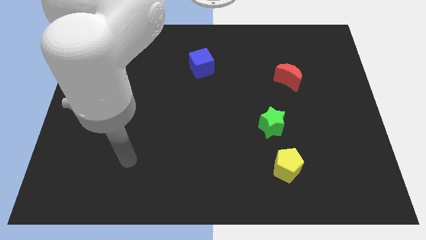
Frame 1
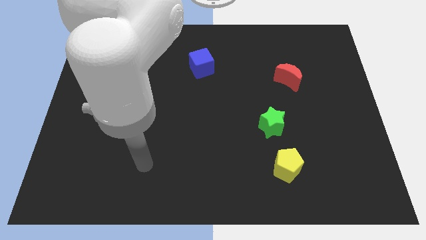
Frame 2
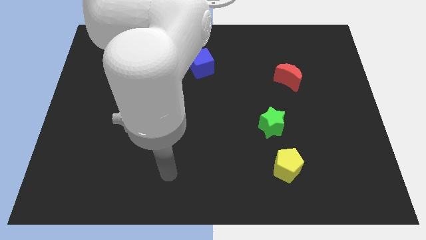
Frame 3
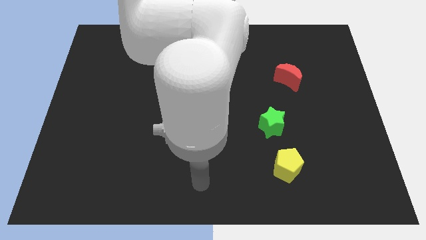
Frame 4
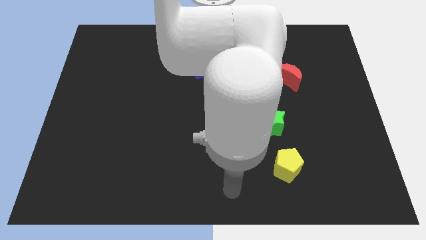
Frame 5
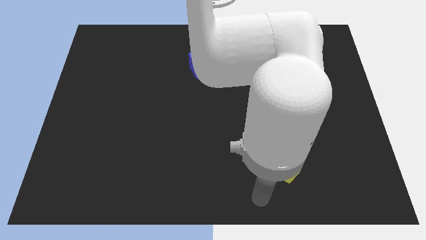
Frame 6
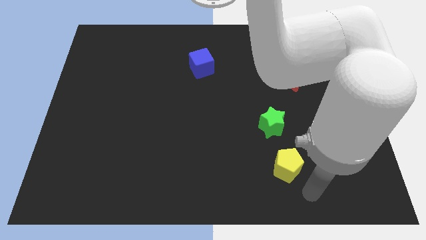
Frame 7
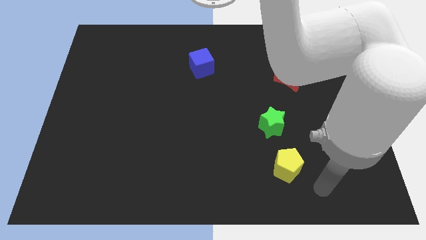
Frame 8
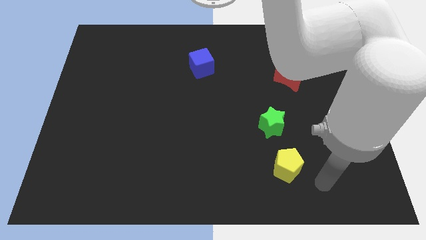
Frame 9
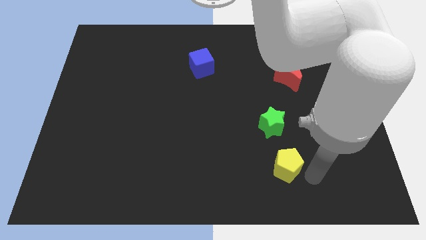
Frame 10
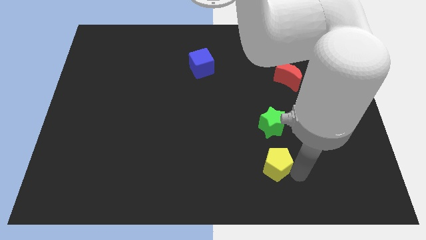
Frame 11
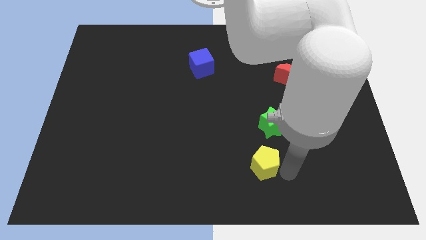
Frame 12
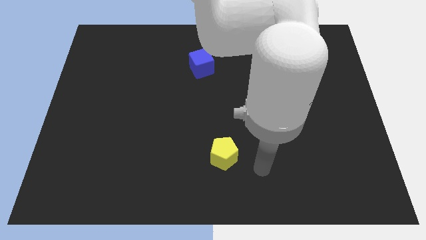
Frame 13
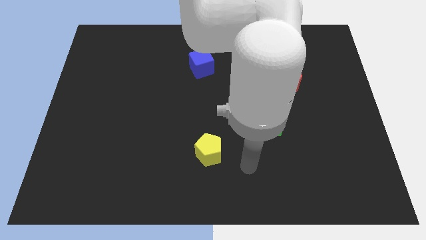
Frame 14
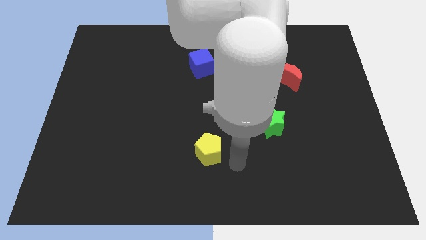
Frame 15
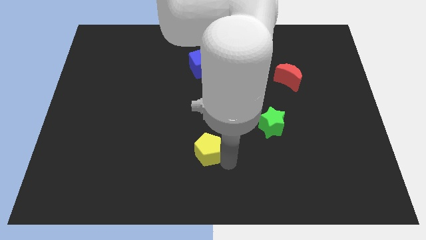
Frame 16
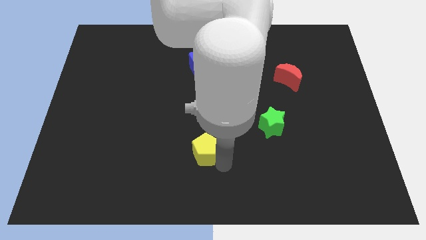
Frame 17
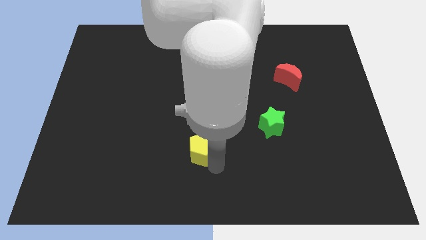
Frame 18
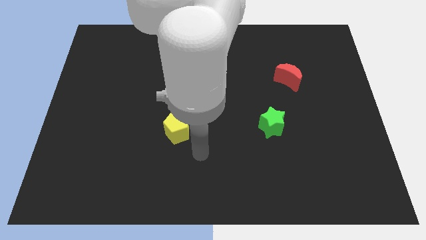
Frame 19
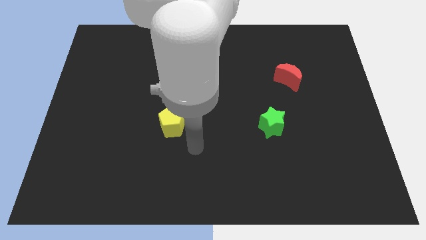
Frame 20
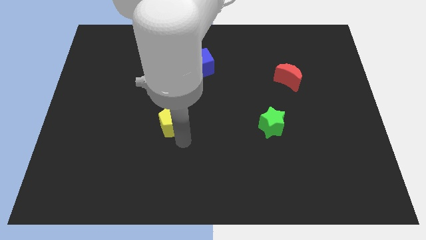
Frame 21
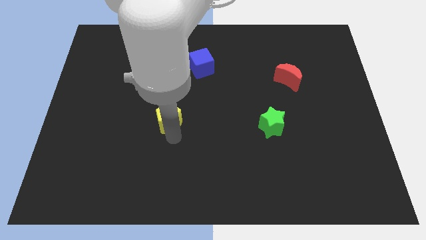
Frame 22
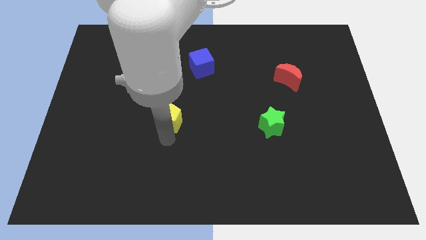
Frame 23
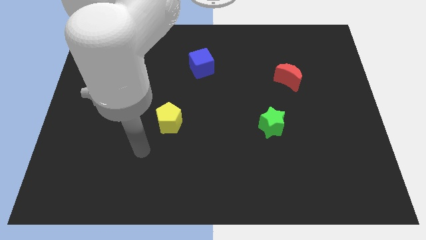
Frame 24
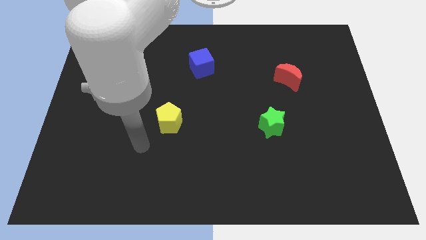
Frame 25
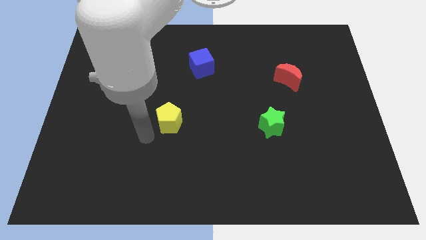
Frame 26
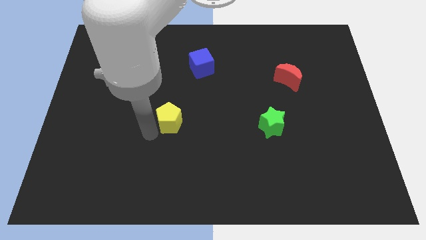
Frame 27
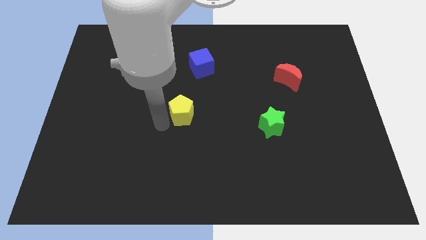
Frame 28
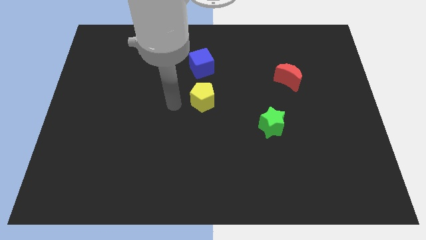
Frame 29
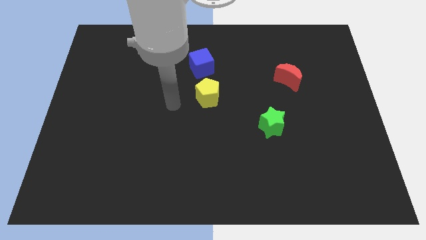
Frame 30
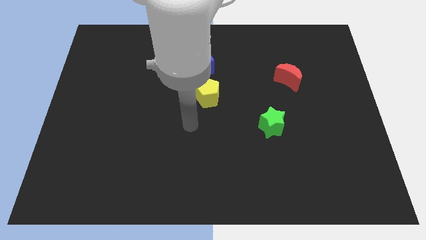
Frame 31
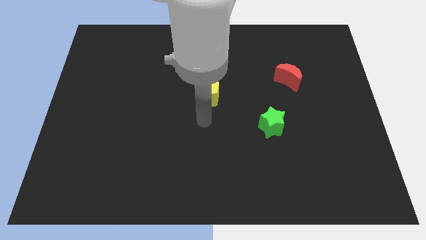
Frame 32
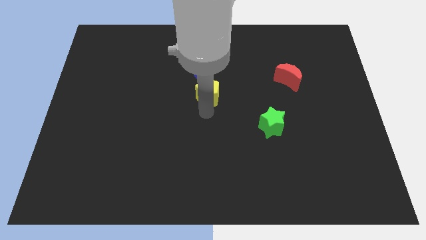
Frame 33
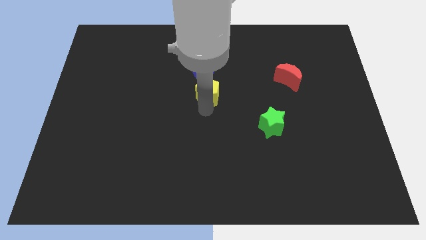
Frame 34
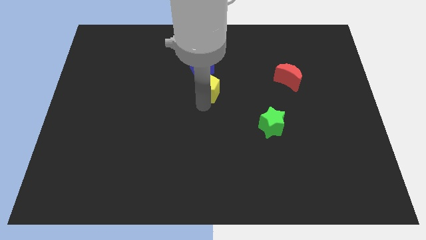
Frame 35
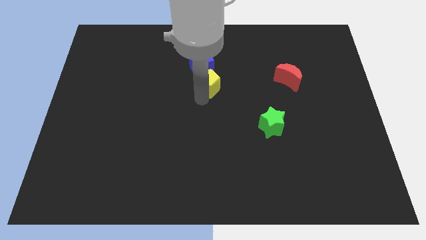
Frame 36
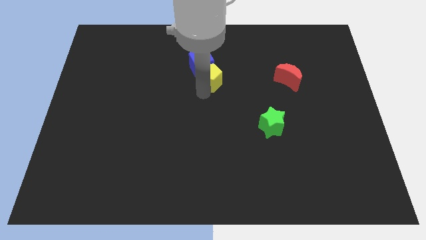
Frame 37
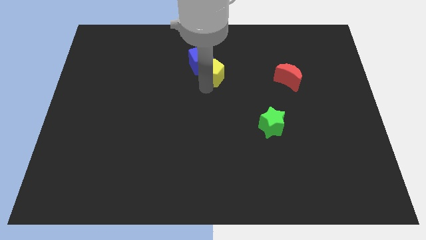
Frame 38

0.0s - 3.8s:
put the yellow pentagon close to the blue cube

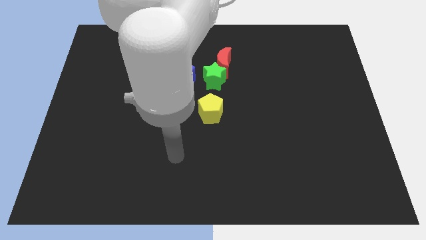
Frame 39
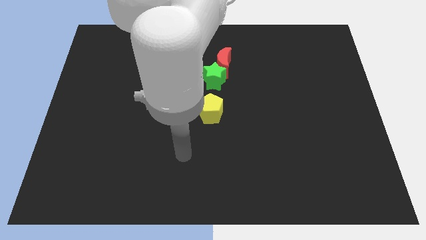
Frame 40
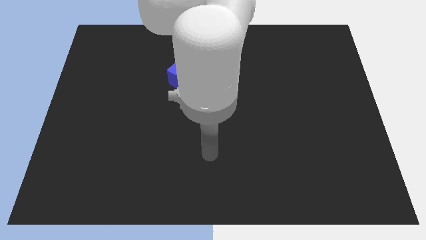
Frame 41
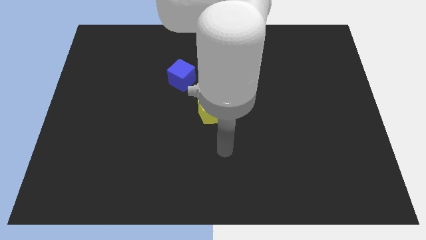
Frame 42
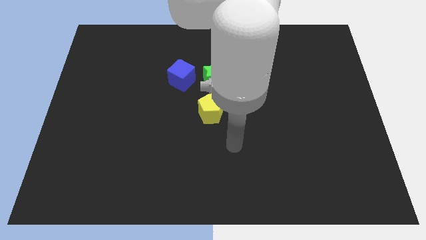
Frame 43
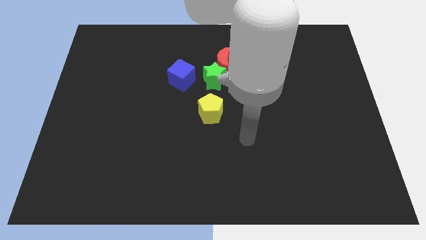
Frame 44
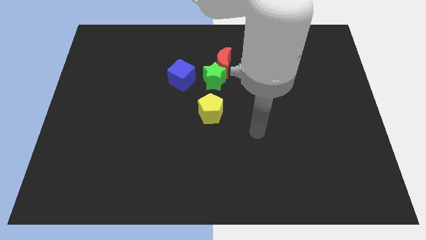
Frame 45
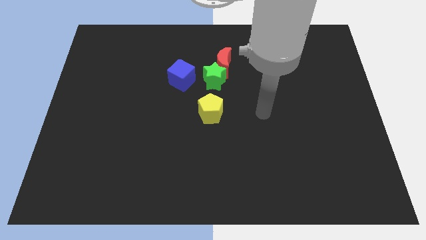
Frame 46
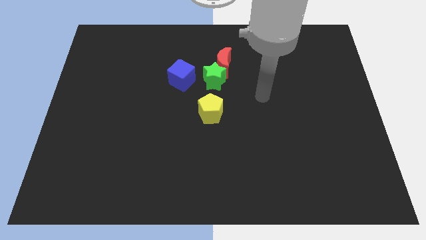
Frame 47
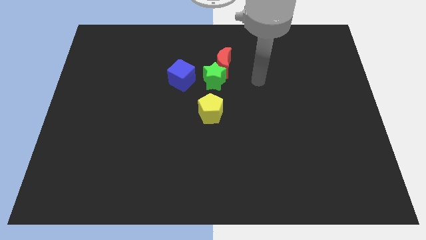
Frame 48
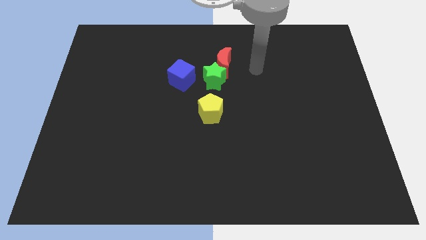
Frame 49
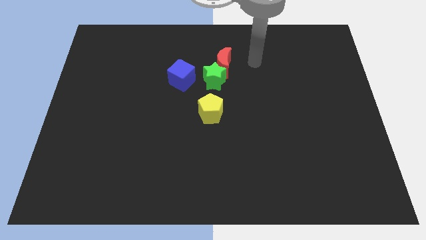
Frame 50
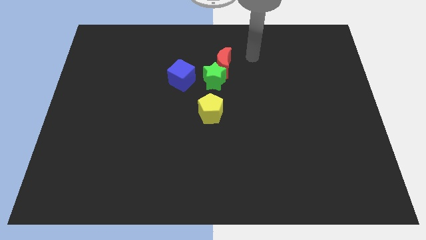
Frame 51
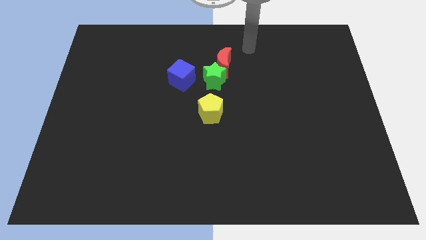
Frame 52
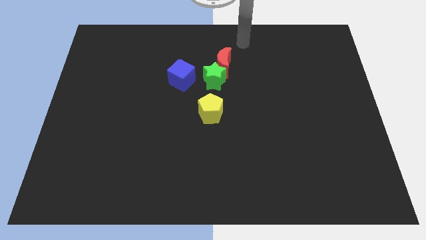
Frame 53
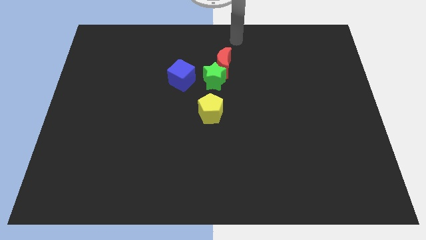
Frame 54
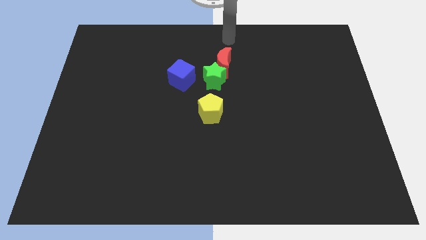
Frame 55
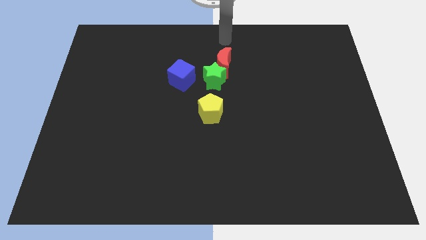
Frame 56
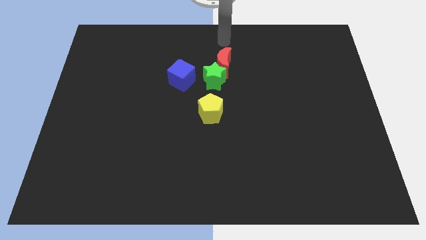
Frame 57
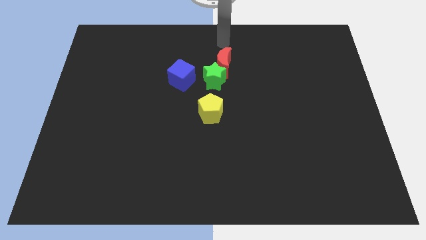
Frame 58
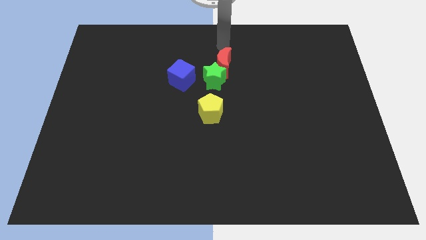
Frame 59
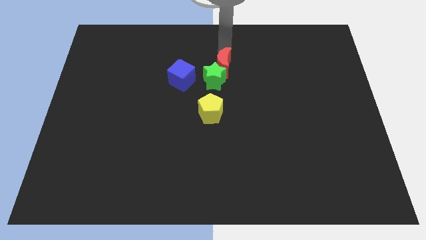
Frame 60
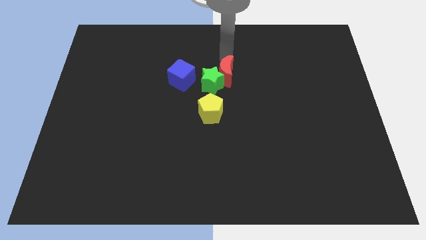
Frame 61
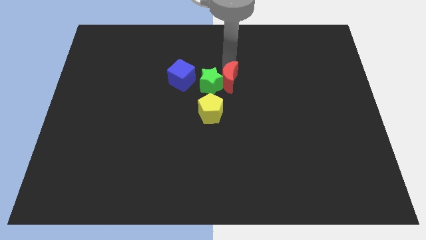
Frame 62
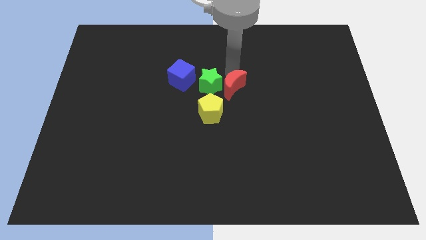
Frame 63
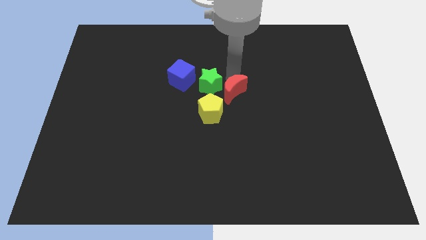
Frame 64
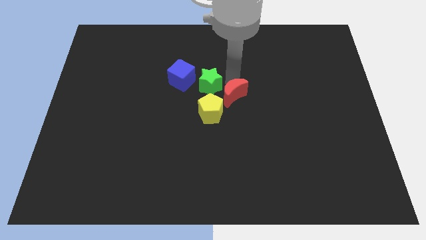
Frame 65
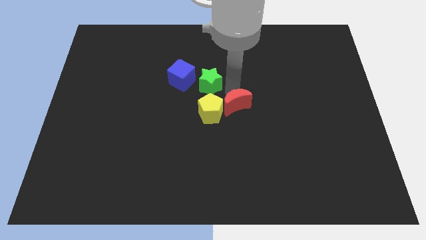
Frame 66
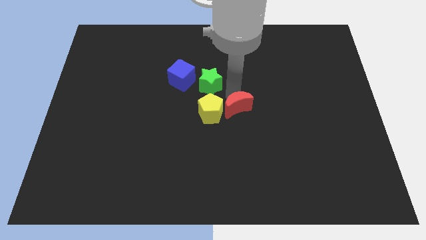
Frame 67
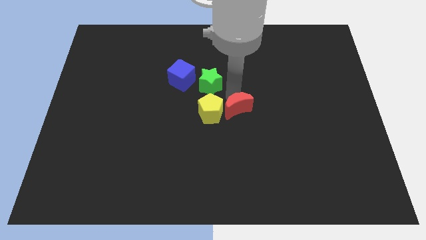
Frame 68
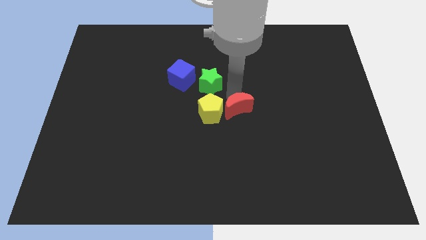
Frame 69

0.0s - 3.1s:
push the red block next to the yellow block

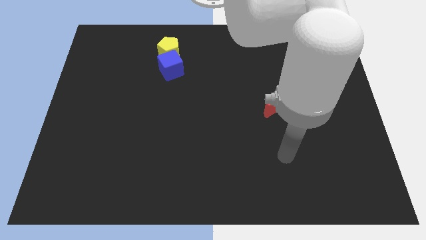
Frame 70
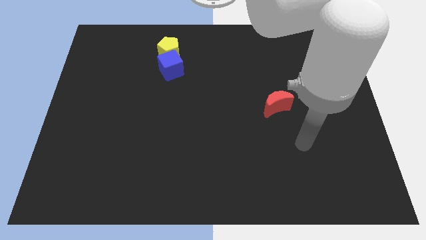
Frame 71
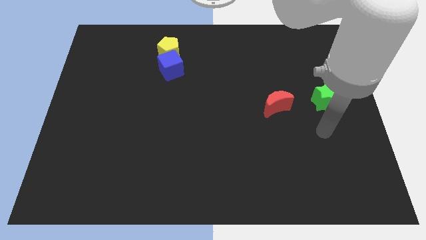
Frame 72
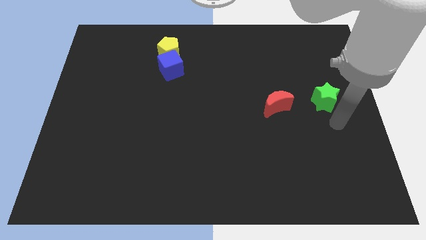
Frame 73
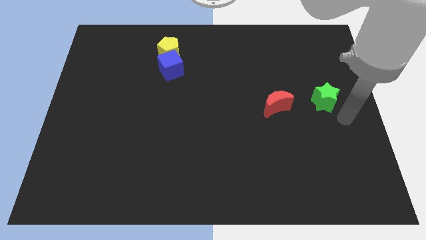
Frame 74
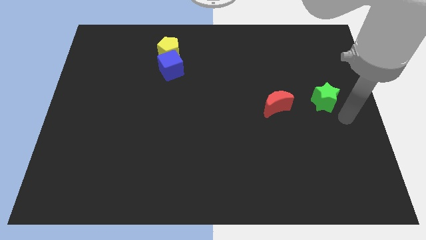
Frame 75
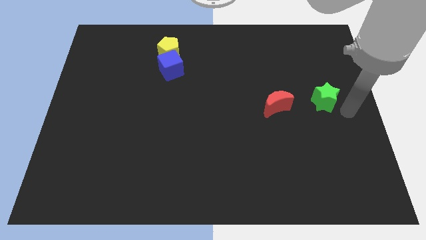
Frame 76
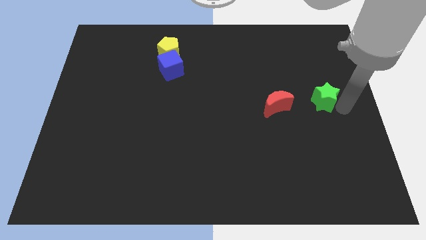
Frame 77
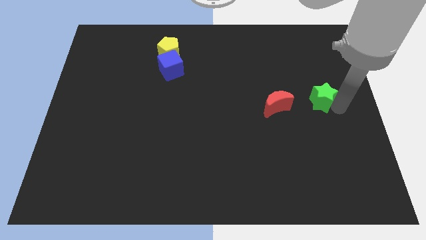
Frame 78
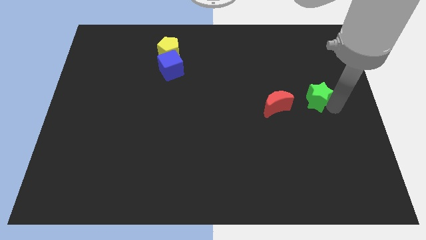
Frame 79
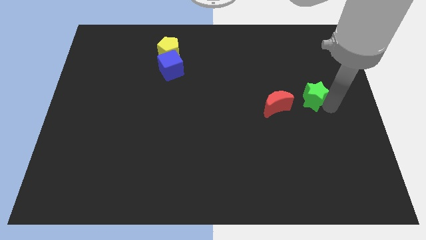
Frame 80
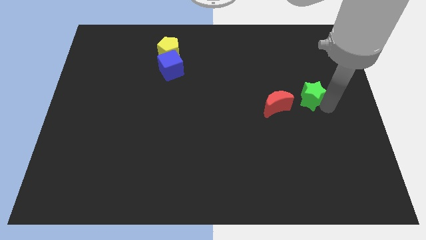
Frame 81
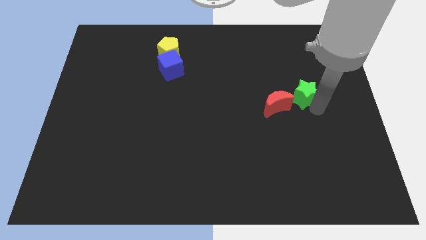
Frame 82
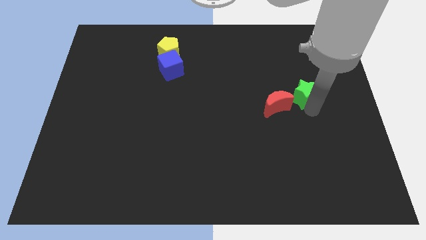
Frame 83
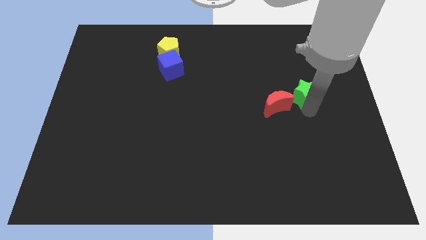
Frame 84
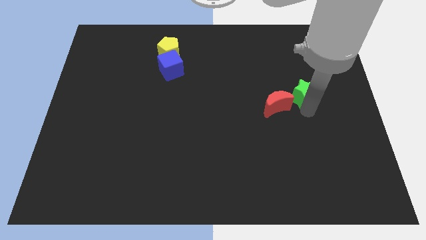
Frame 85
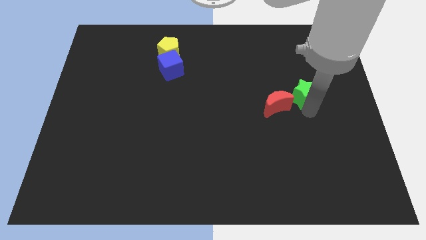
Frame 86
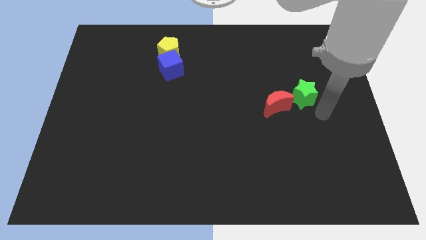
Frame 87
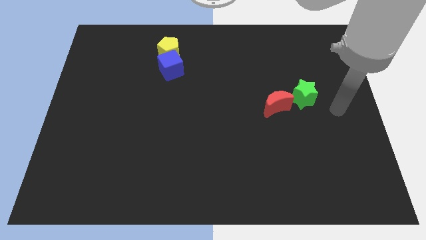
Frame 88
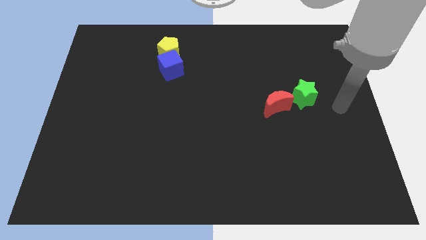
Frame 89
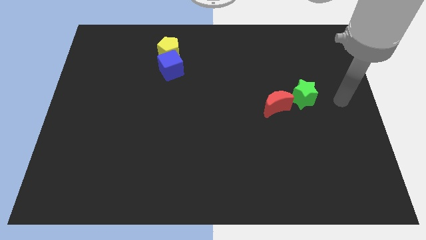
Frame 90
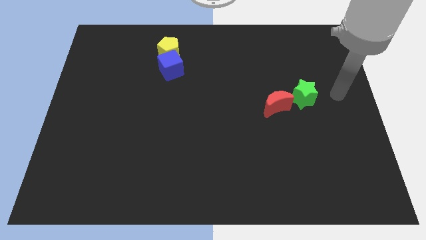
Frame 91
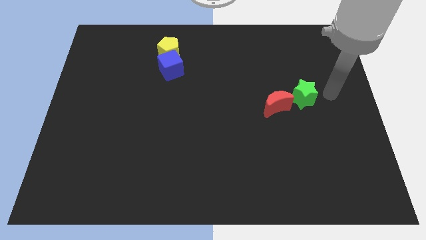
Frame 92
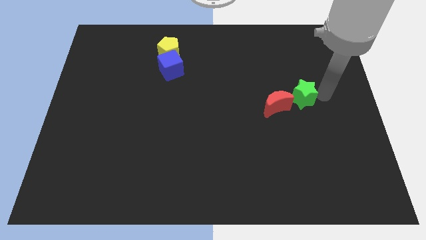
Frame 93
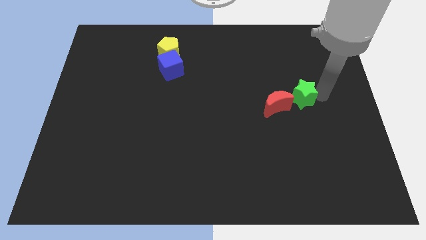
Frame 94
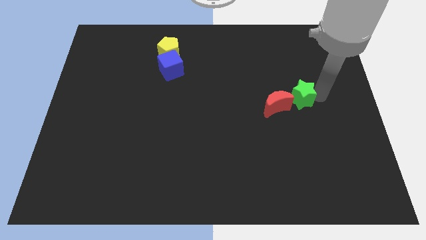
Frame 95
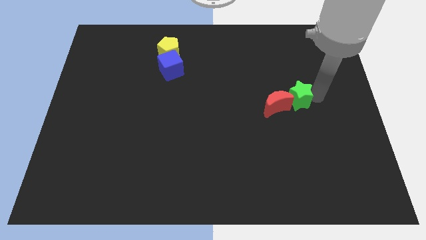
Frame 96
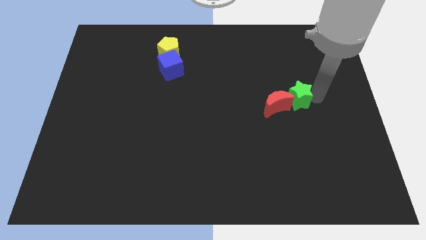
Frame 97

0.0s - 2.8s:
push the green block towards the red block
